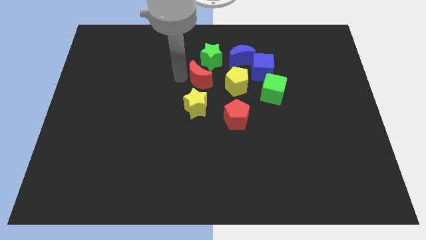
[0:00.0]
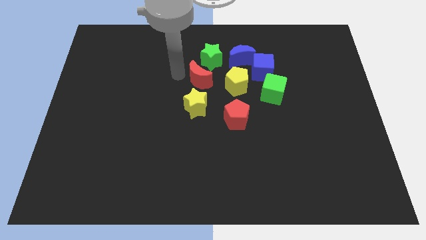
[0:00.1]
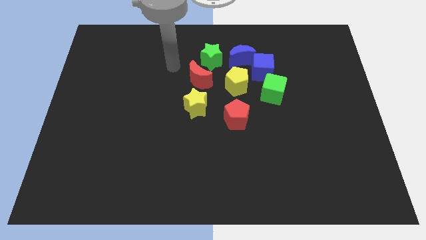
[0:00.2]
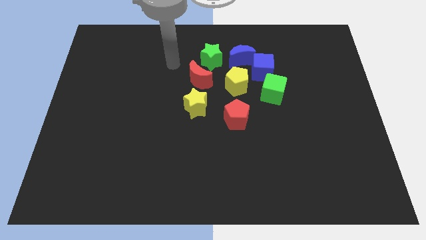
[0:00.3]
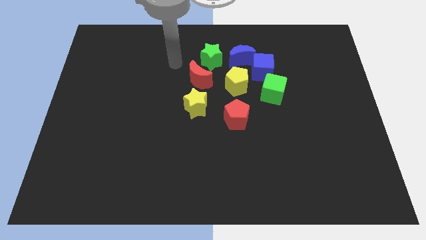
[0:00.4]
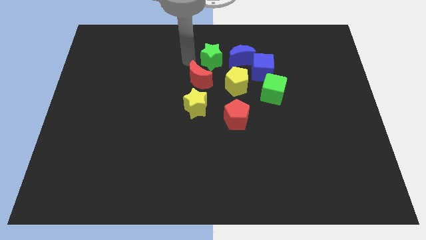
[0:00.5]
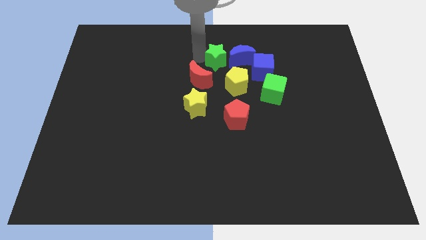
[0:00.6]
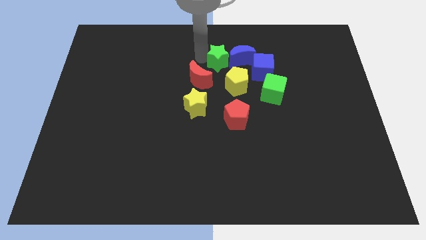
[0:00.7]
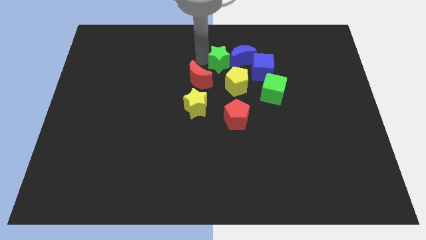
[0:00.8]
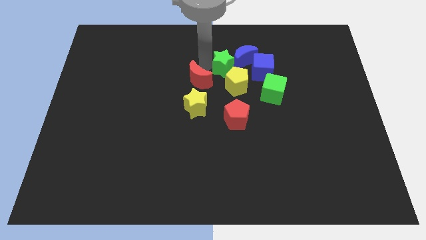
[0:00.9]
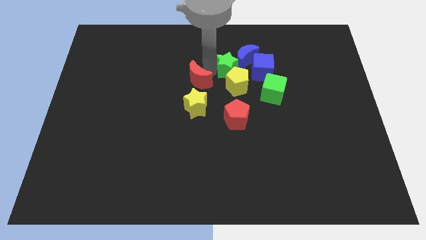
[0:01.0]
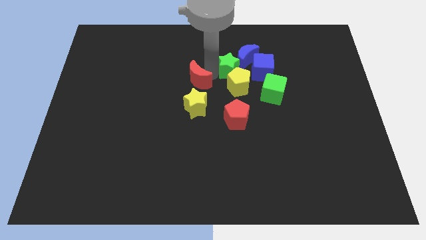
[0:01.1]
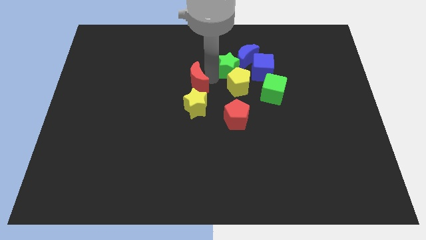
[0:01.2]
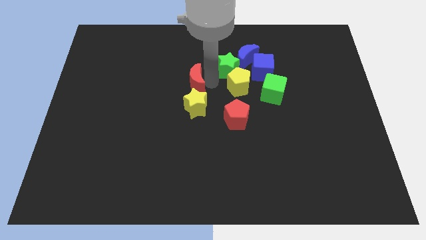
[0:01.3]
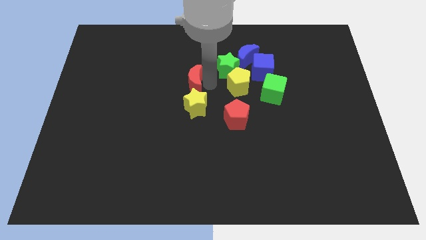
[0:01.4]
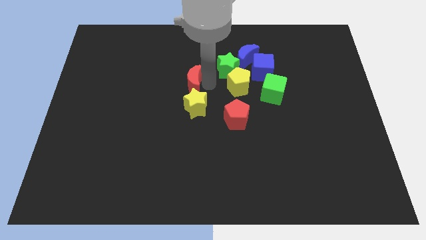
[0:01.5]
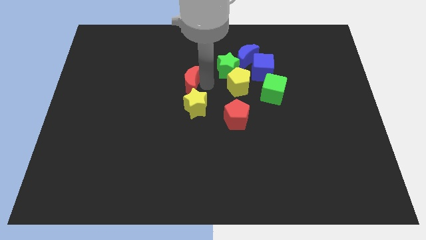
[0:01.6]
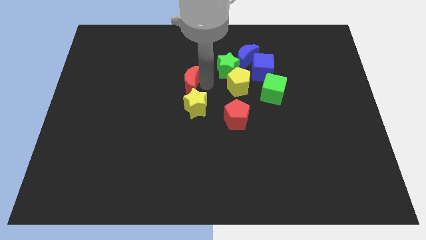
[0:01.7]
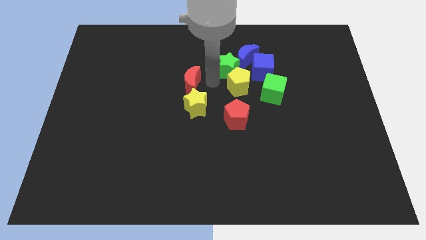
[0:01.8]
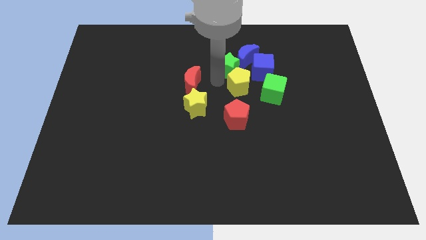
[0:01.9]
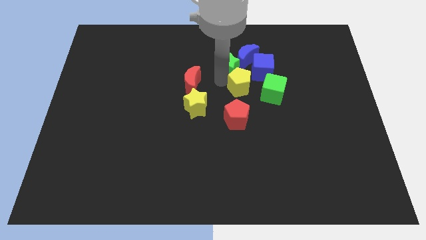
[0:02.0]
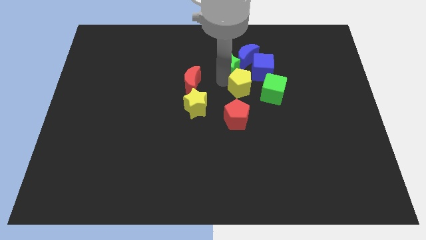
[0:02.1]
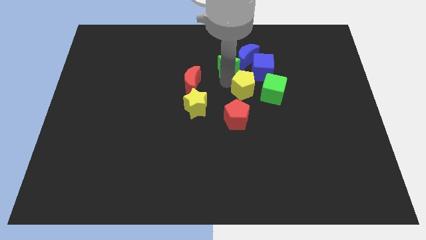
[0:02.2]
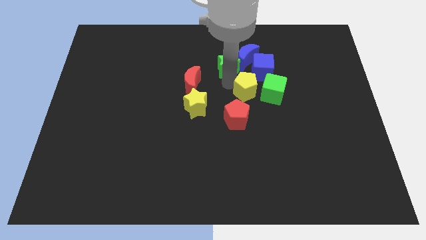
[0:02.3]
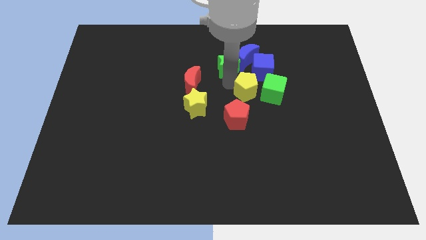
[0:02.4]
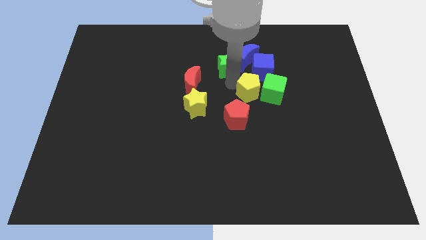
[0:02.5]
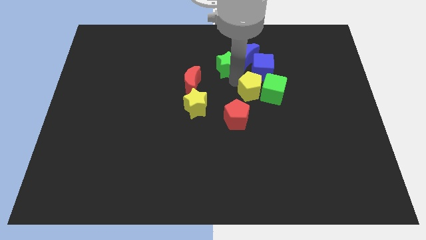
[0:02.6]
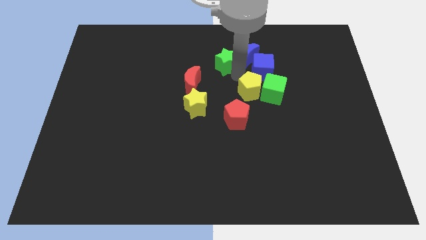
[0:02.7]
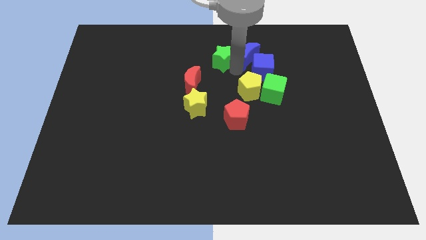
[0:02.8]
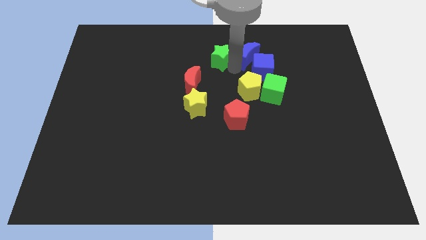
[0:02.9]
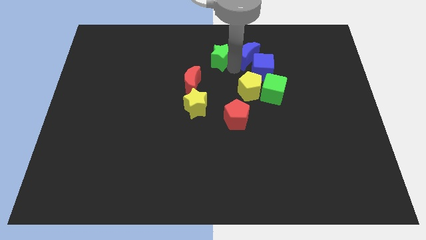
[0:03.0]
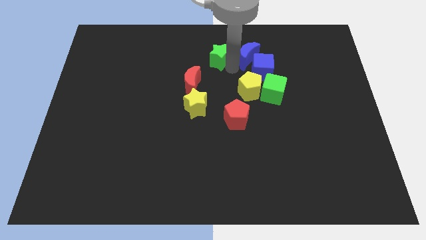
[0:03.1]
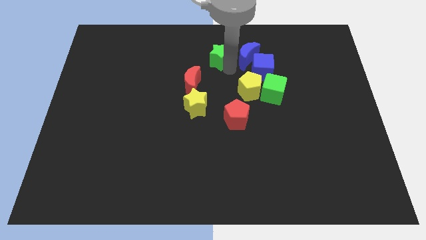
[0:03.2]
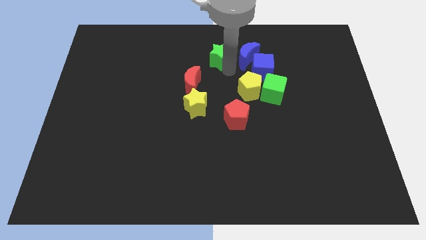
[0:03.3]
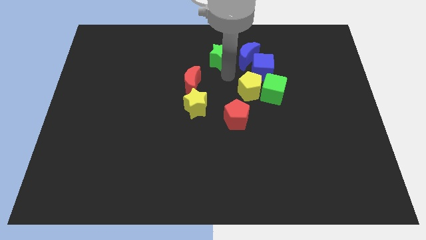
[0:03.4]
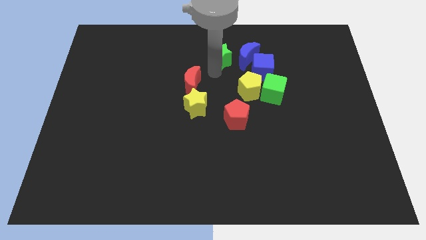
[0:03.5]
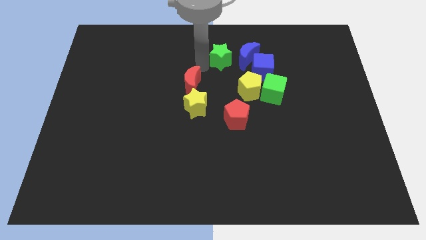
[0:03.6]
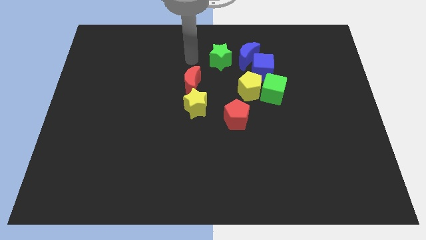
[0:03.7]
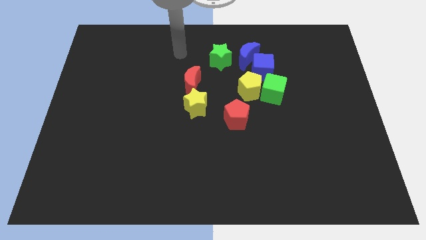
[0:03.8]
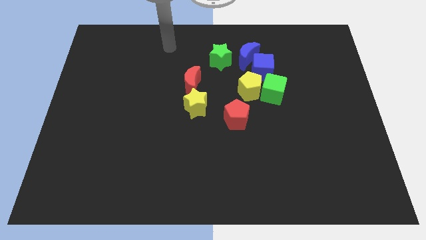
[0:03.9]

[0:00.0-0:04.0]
form a triangle with the green star red moon and yellow pentagon

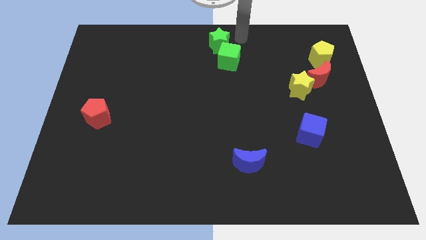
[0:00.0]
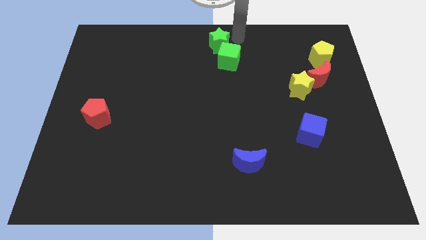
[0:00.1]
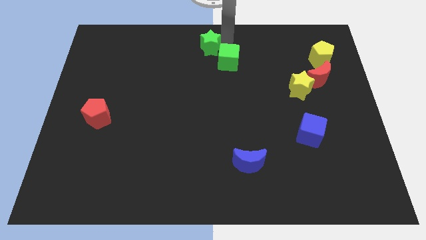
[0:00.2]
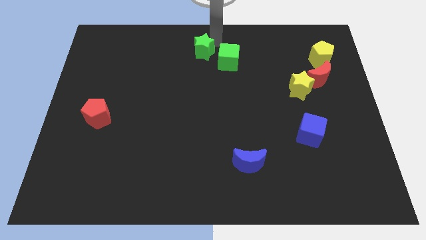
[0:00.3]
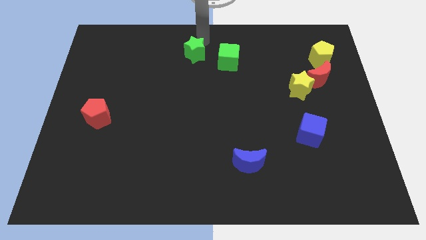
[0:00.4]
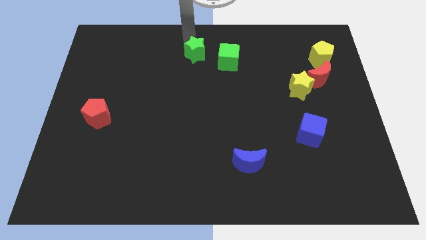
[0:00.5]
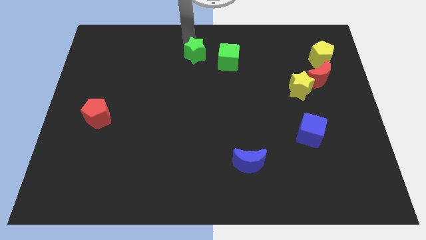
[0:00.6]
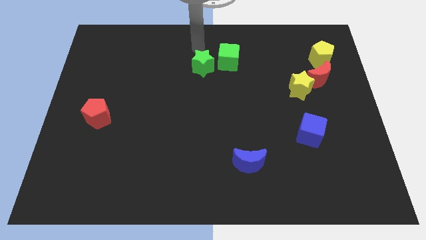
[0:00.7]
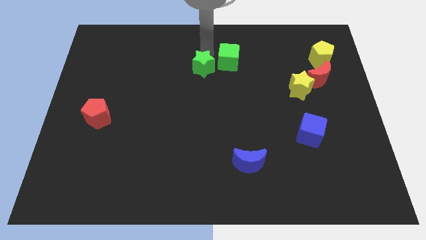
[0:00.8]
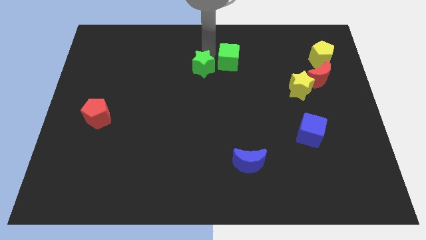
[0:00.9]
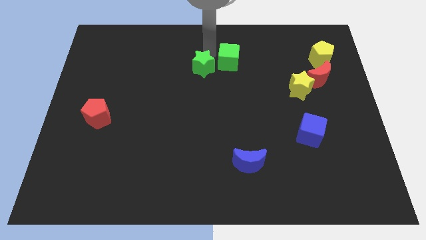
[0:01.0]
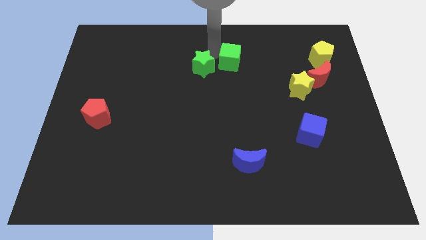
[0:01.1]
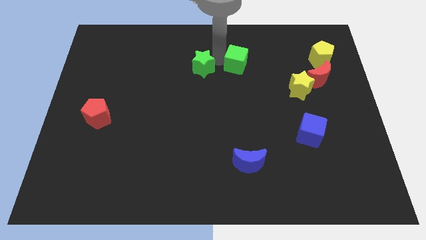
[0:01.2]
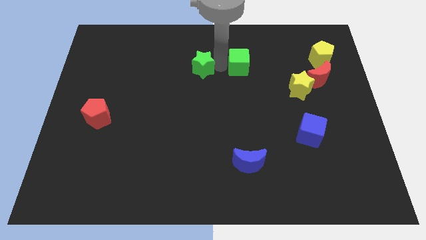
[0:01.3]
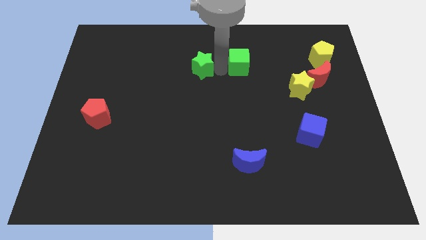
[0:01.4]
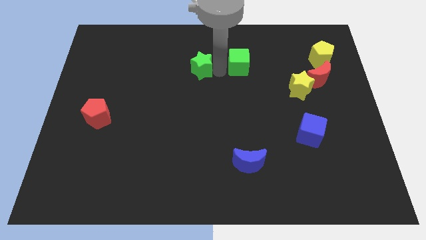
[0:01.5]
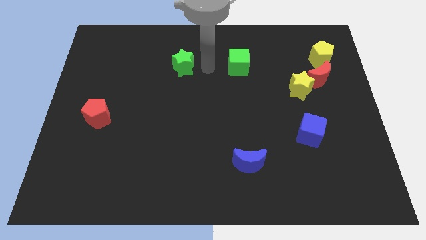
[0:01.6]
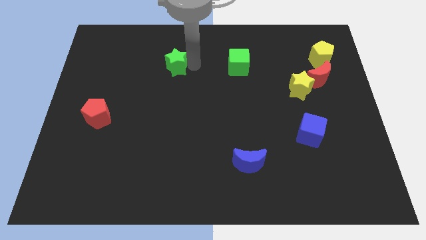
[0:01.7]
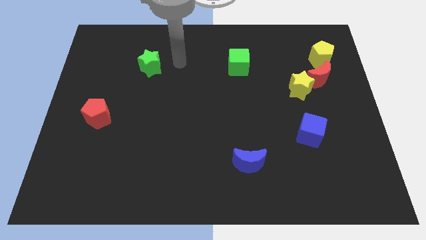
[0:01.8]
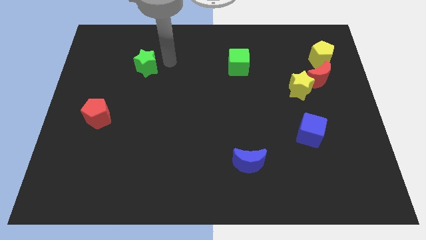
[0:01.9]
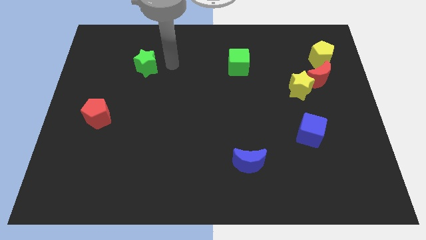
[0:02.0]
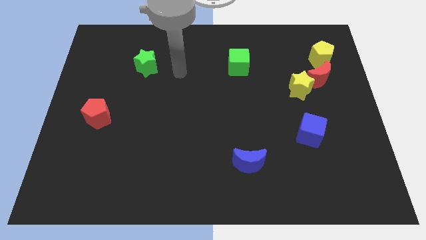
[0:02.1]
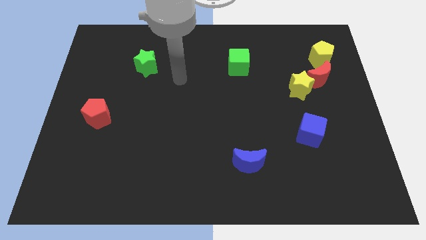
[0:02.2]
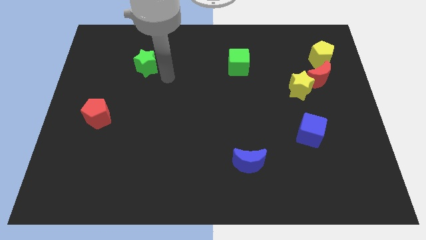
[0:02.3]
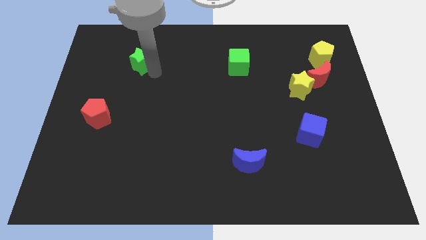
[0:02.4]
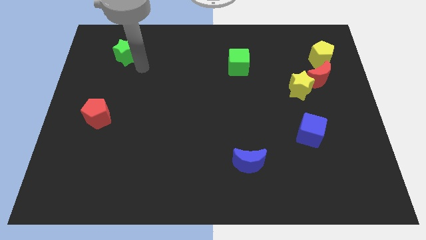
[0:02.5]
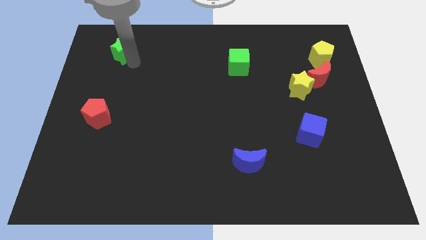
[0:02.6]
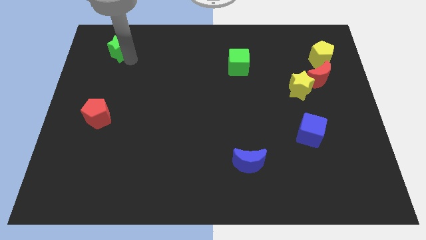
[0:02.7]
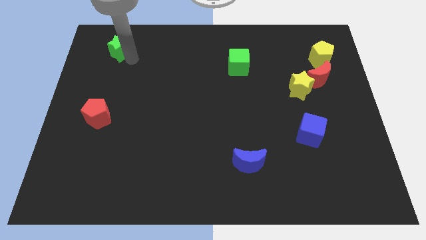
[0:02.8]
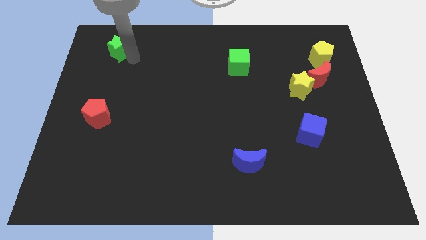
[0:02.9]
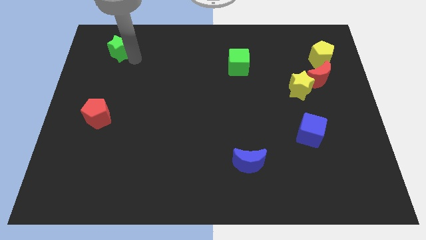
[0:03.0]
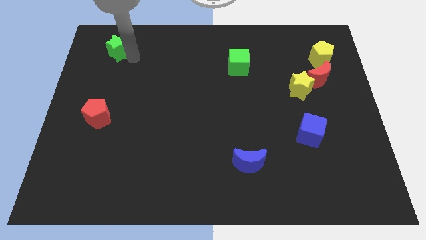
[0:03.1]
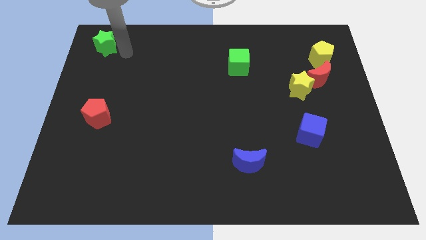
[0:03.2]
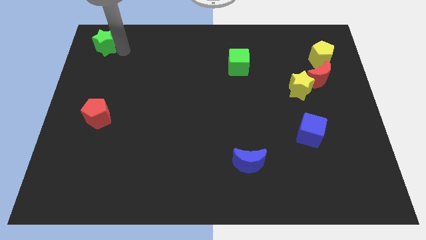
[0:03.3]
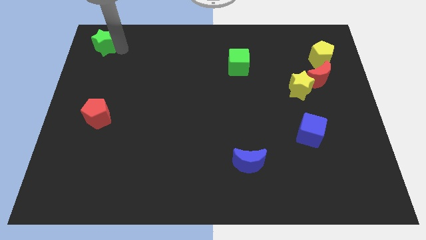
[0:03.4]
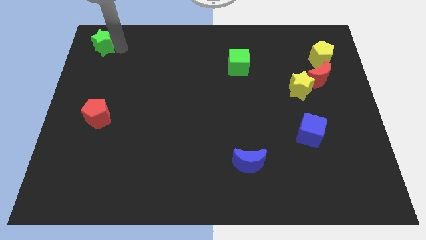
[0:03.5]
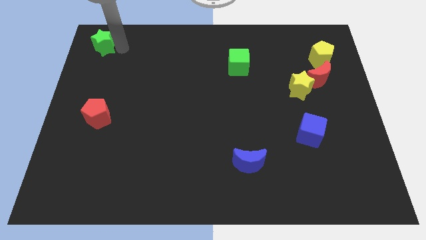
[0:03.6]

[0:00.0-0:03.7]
push the green star to the left side of the board

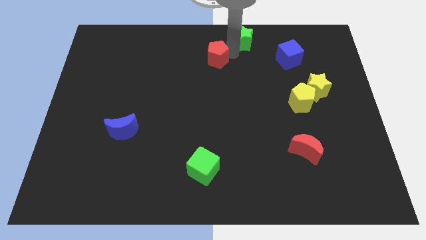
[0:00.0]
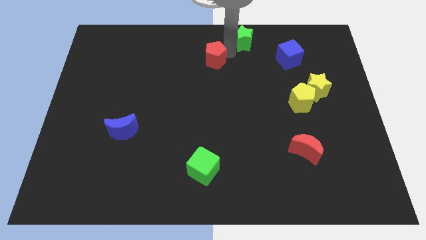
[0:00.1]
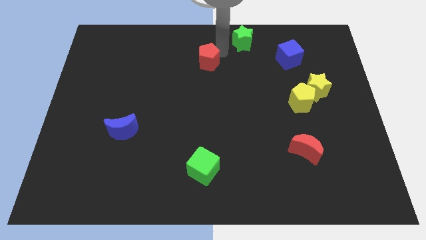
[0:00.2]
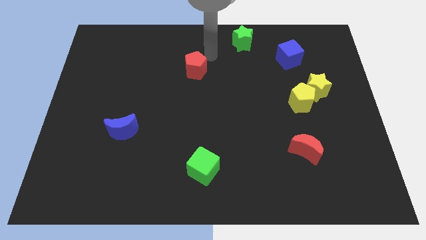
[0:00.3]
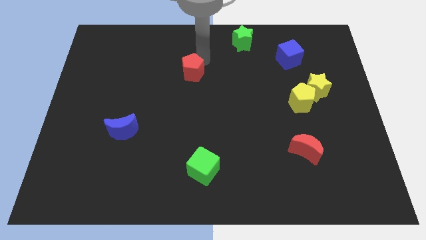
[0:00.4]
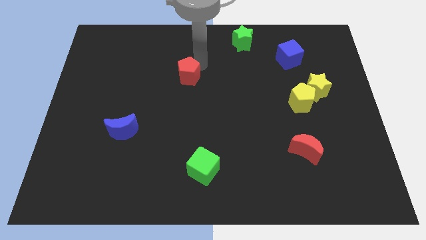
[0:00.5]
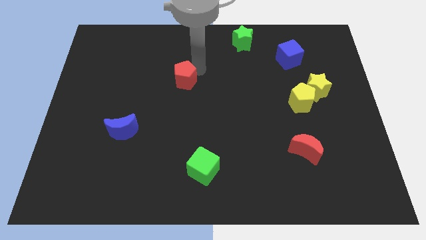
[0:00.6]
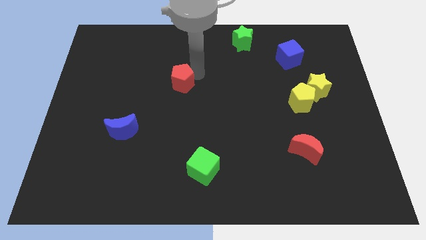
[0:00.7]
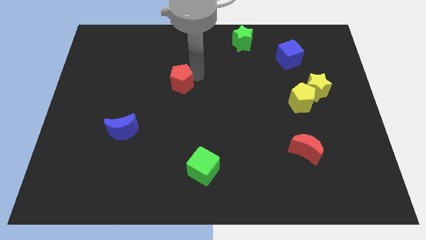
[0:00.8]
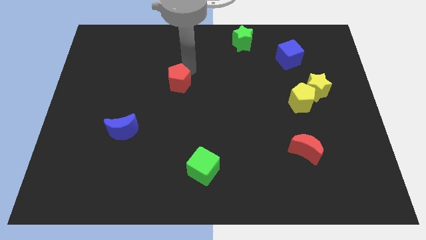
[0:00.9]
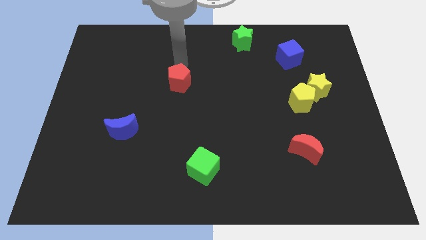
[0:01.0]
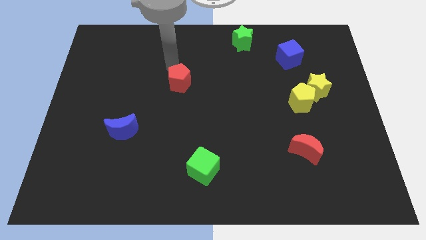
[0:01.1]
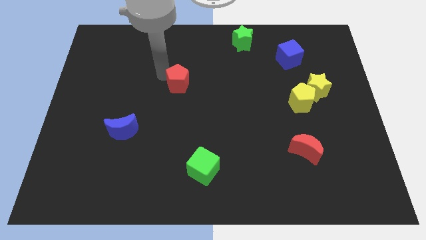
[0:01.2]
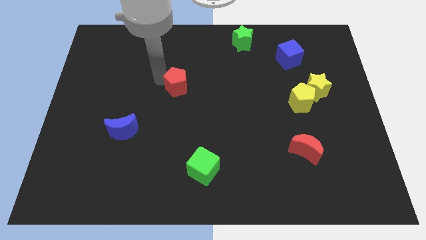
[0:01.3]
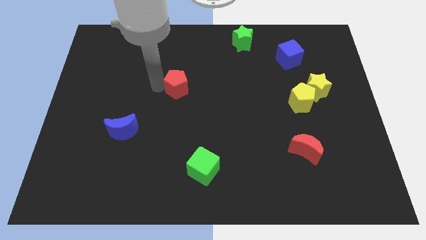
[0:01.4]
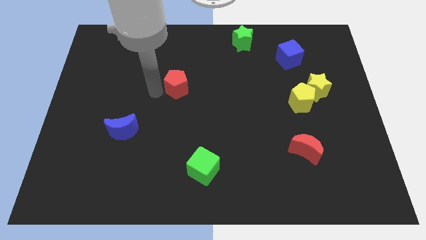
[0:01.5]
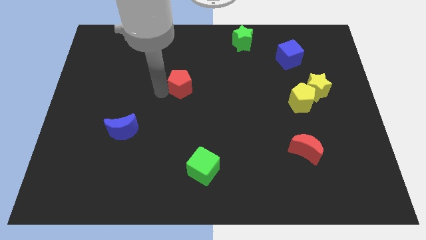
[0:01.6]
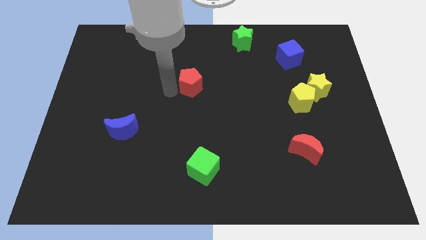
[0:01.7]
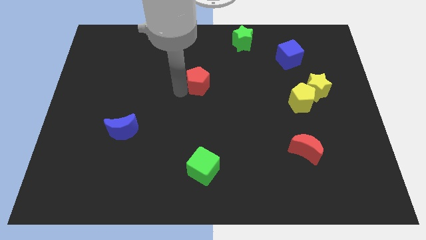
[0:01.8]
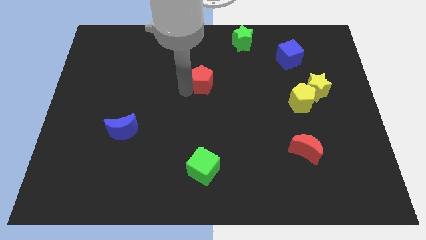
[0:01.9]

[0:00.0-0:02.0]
push the red pentagon towards the center of the board
